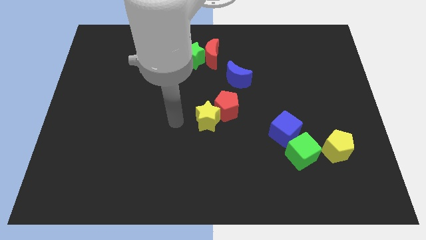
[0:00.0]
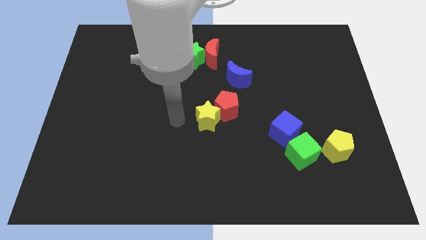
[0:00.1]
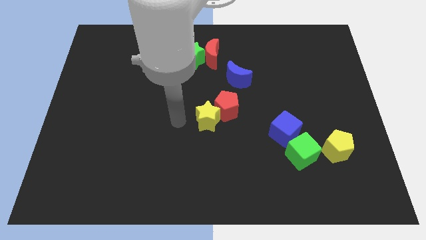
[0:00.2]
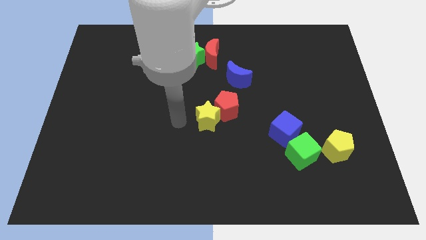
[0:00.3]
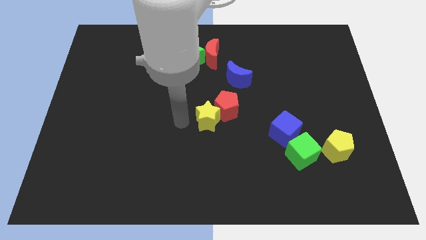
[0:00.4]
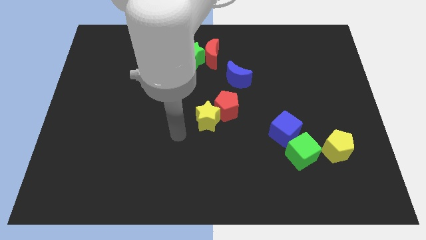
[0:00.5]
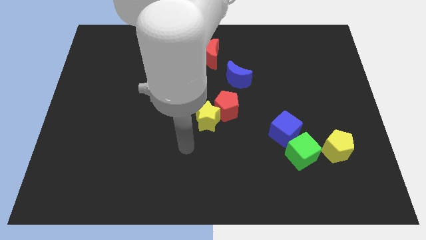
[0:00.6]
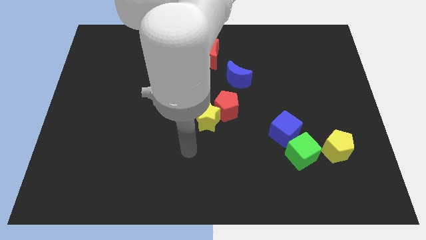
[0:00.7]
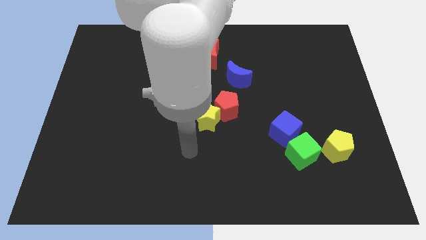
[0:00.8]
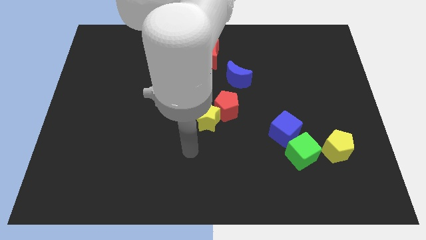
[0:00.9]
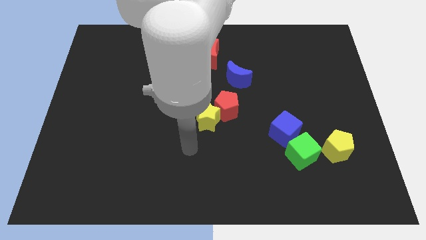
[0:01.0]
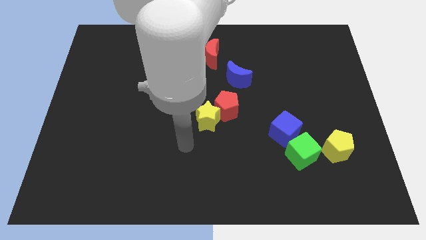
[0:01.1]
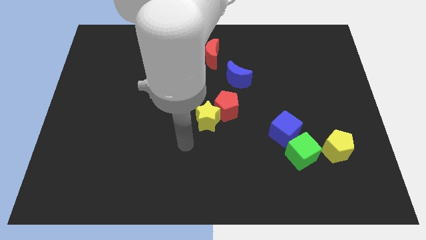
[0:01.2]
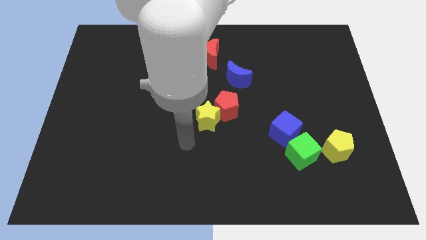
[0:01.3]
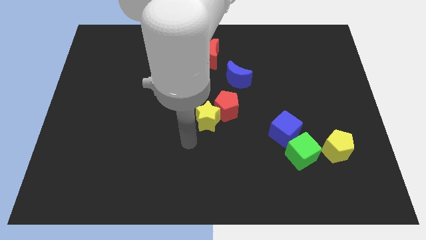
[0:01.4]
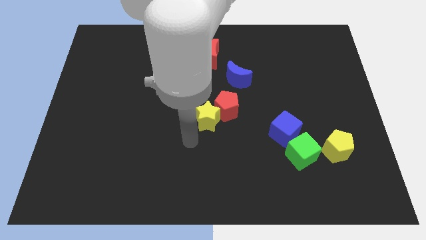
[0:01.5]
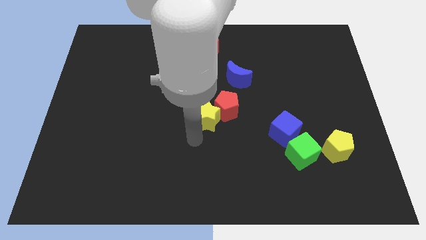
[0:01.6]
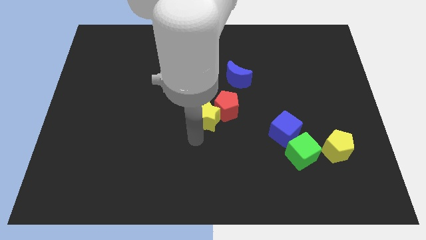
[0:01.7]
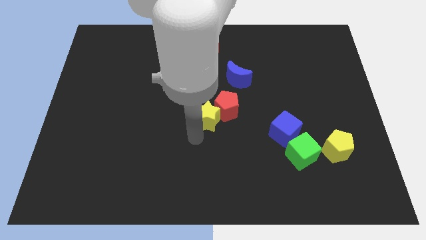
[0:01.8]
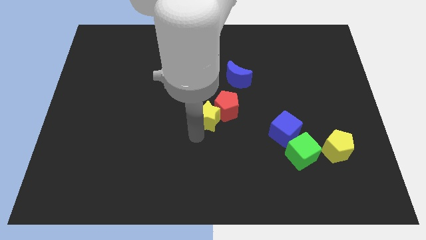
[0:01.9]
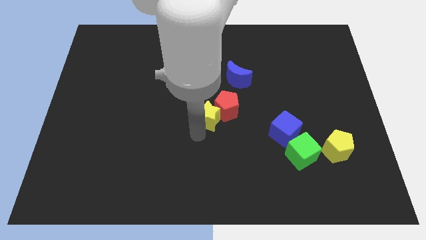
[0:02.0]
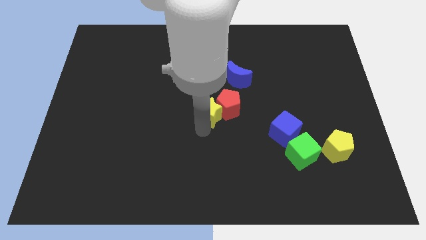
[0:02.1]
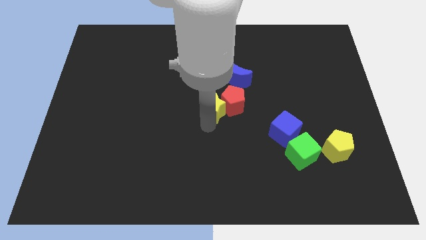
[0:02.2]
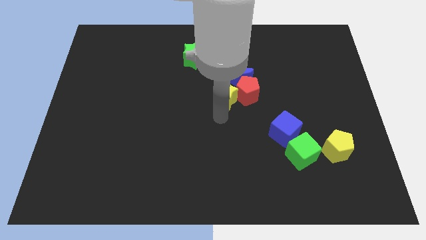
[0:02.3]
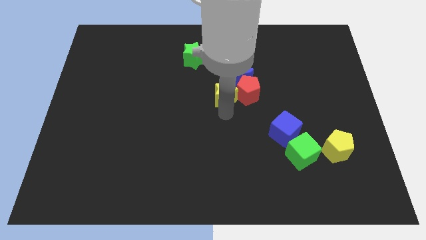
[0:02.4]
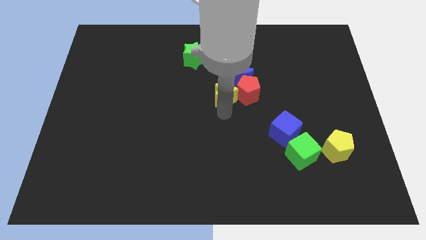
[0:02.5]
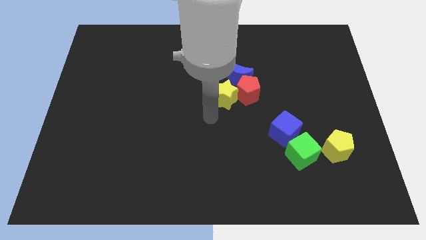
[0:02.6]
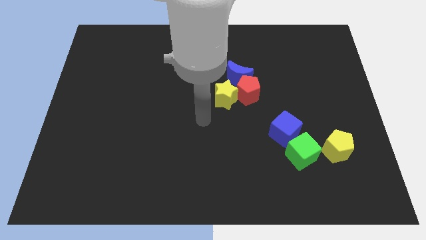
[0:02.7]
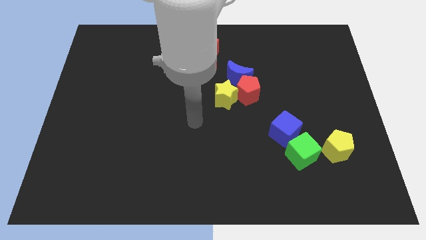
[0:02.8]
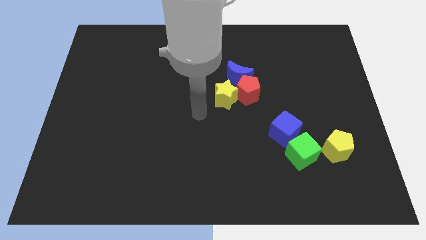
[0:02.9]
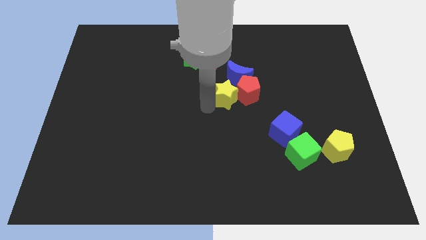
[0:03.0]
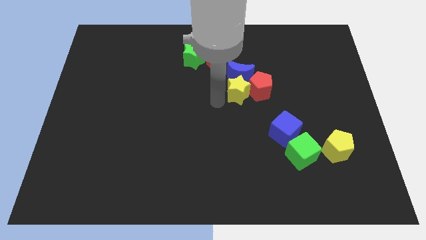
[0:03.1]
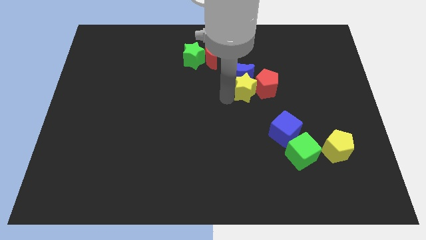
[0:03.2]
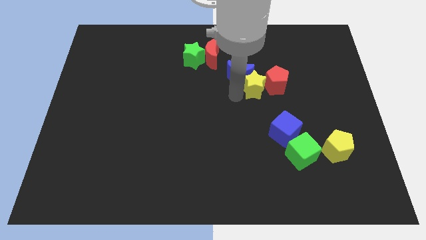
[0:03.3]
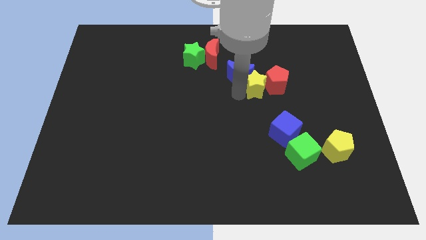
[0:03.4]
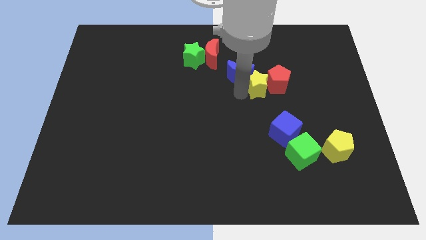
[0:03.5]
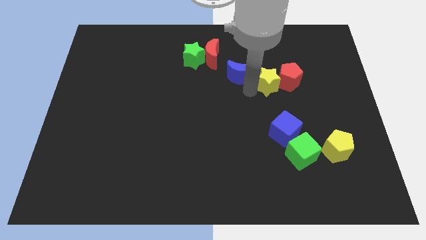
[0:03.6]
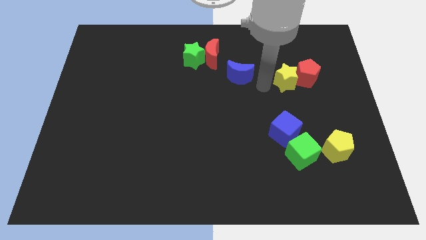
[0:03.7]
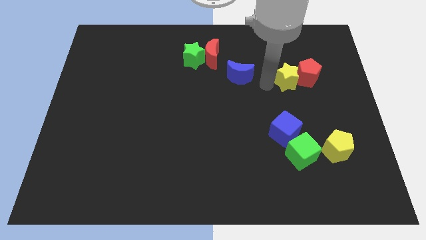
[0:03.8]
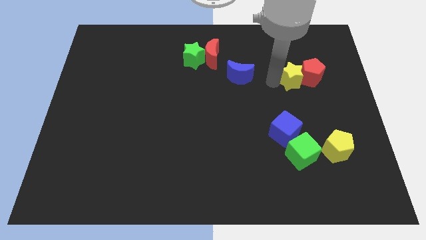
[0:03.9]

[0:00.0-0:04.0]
push yellow star right to the blue moon

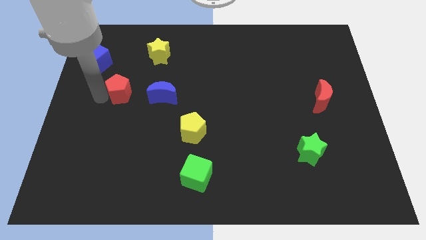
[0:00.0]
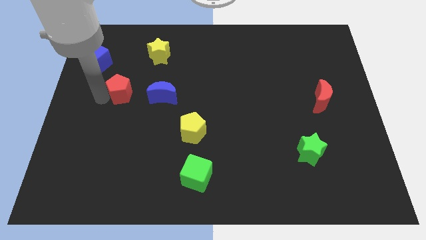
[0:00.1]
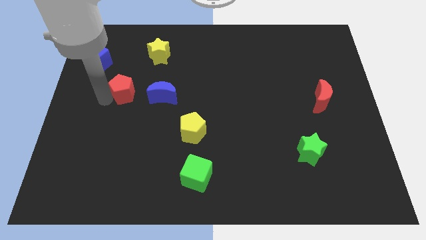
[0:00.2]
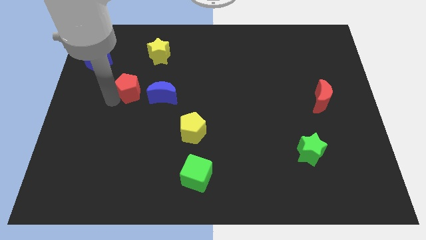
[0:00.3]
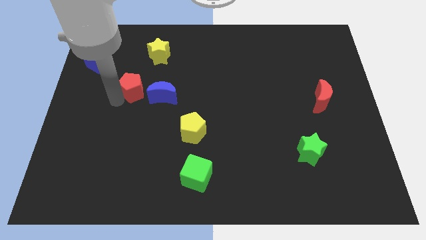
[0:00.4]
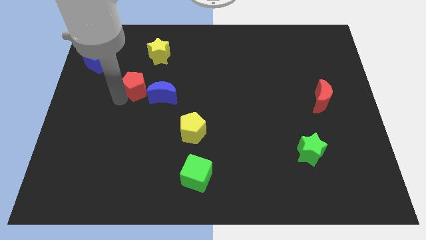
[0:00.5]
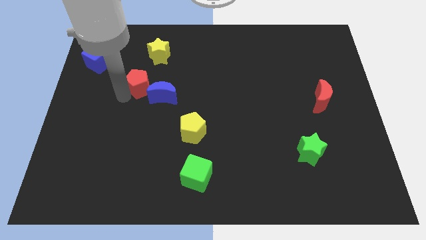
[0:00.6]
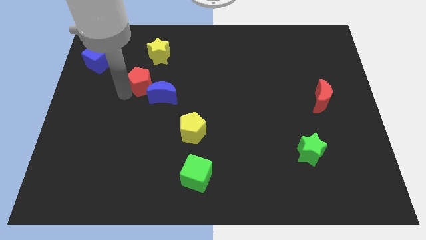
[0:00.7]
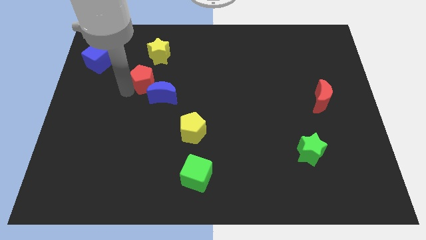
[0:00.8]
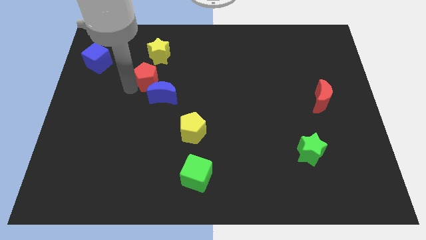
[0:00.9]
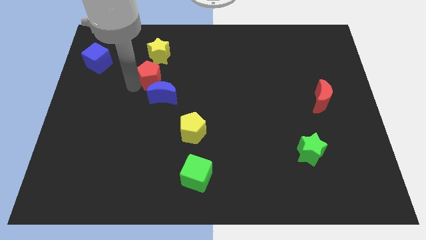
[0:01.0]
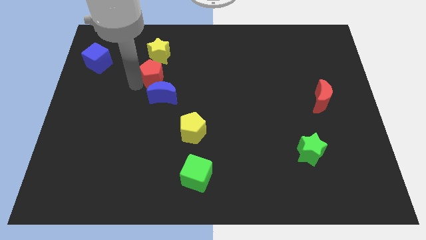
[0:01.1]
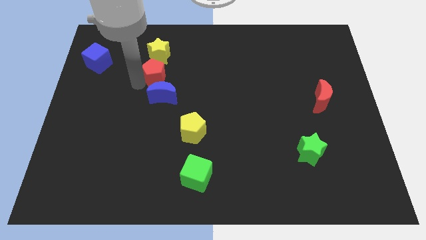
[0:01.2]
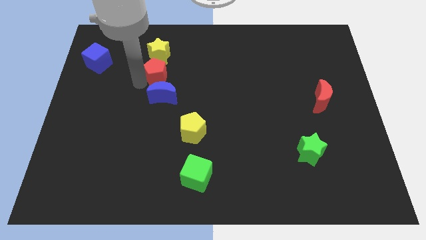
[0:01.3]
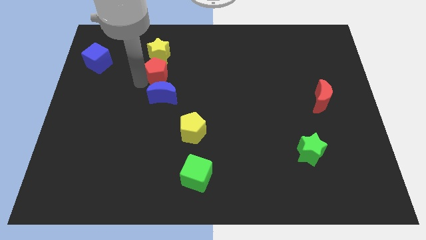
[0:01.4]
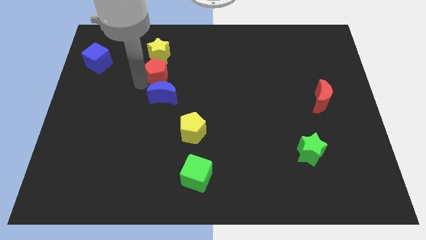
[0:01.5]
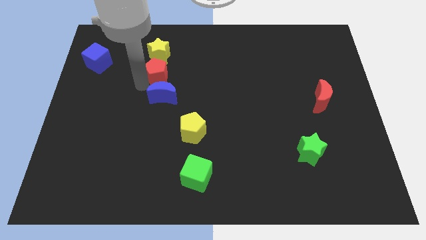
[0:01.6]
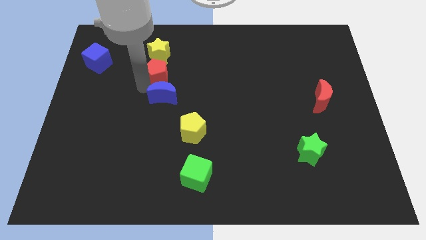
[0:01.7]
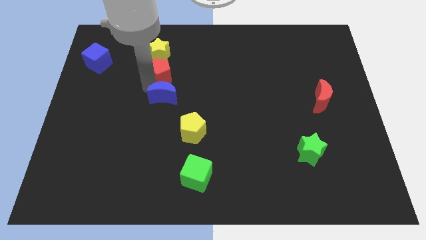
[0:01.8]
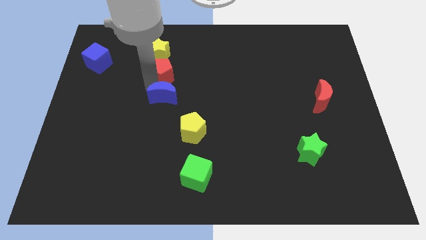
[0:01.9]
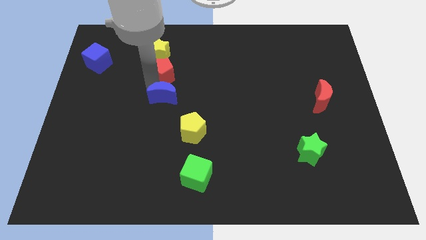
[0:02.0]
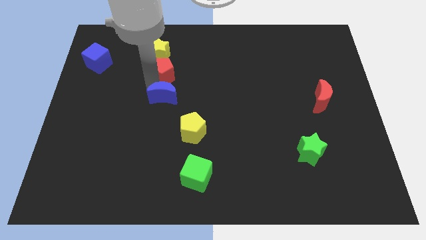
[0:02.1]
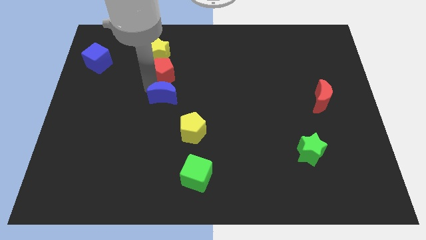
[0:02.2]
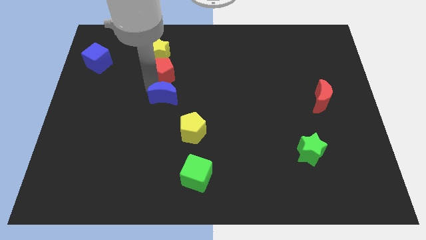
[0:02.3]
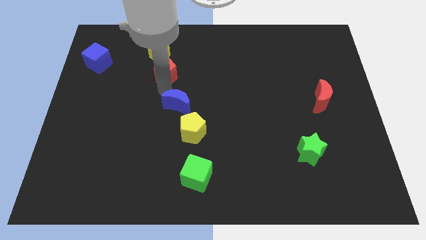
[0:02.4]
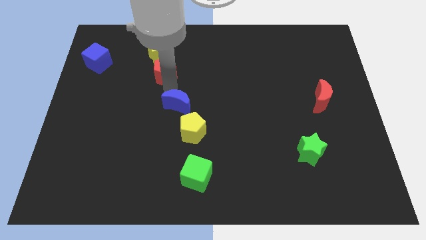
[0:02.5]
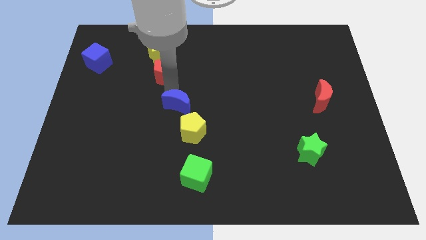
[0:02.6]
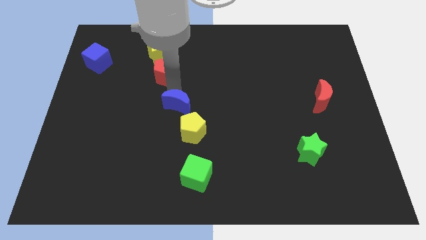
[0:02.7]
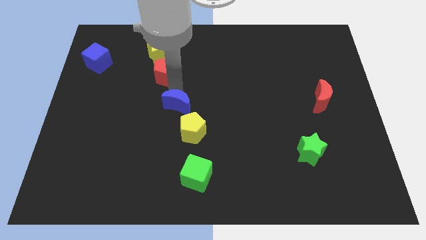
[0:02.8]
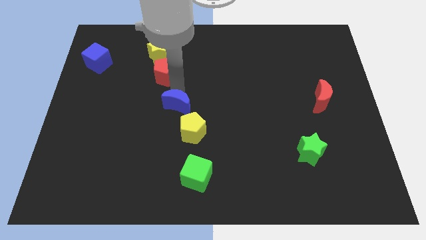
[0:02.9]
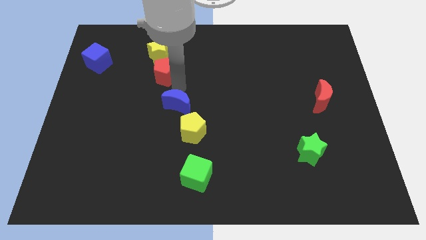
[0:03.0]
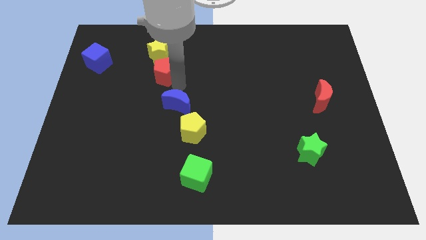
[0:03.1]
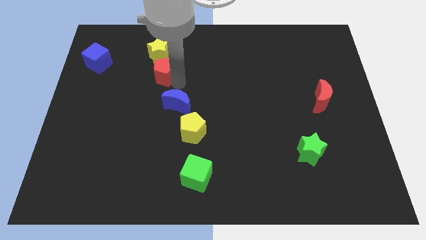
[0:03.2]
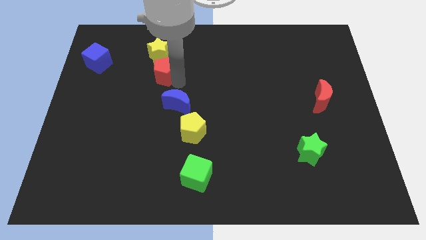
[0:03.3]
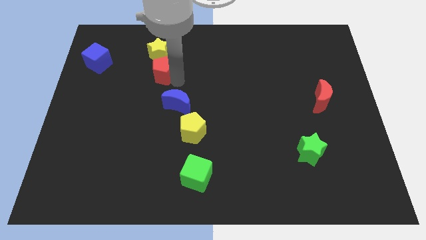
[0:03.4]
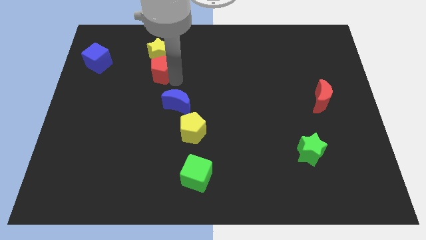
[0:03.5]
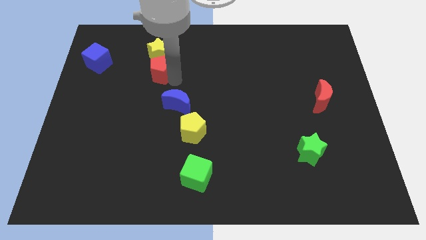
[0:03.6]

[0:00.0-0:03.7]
move the red pentagon in between the yellow star and blue crescent

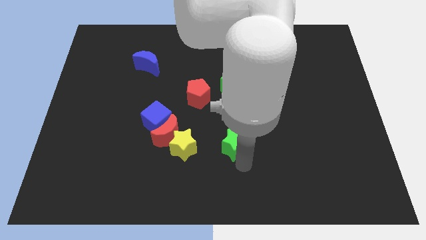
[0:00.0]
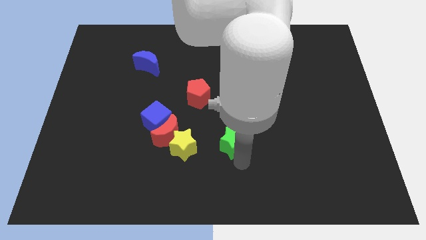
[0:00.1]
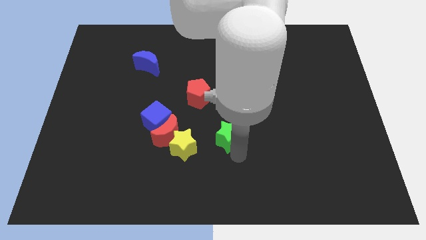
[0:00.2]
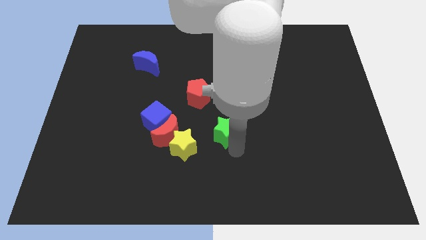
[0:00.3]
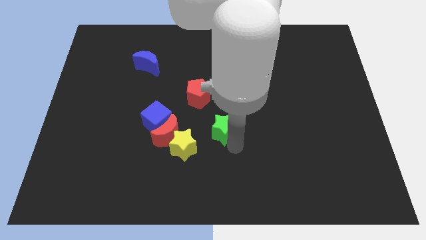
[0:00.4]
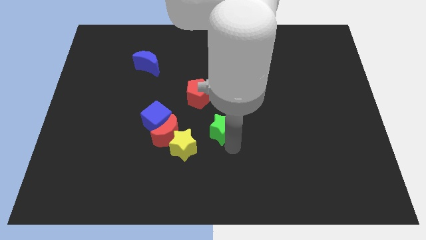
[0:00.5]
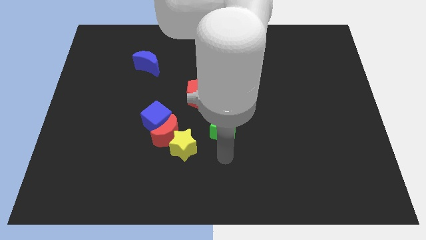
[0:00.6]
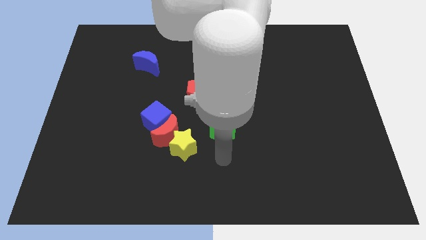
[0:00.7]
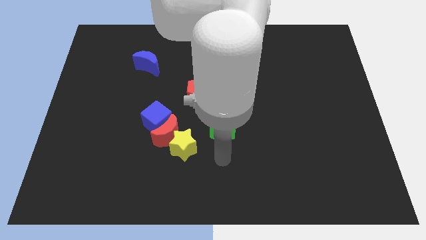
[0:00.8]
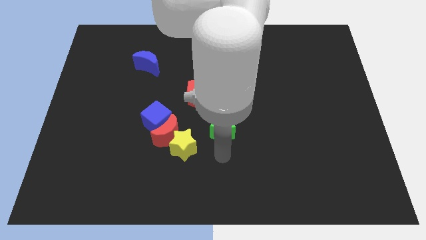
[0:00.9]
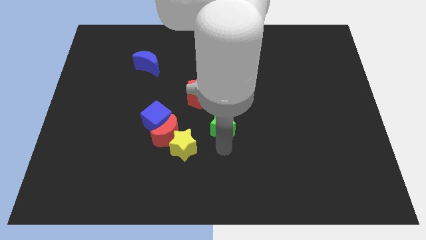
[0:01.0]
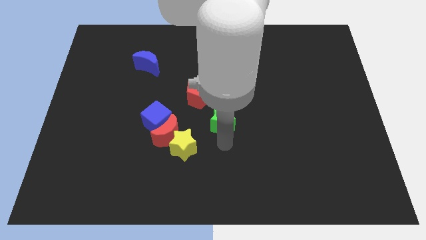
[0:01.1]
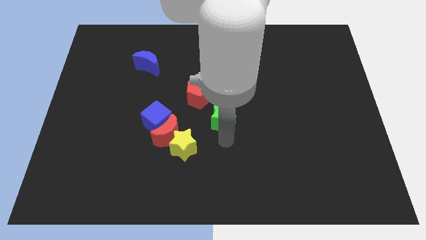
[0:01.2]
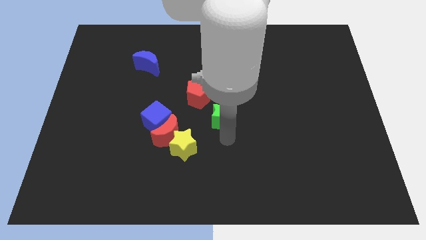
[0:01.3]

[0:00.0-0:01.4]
push the green star towards the center of the board
